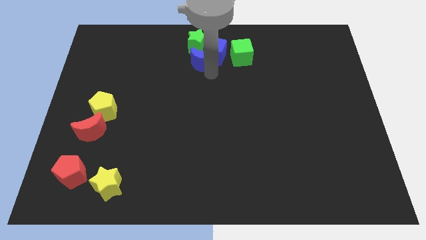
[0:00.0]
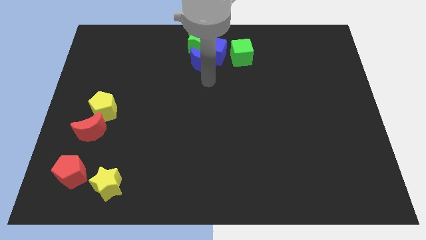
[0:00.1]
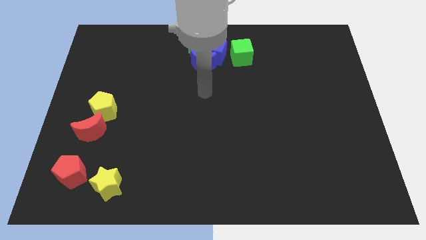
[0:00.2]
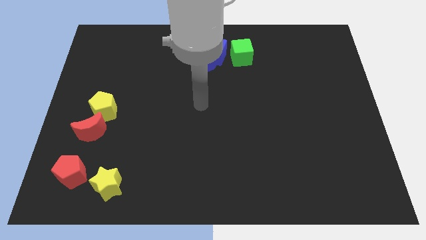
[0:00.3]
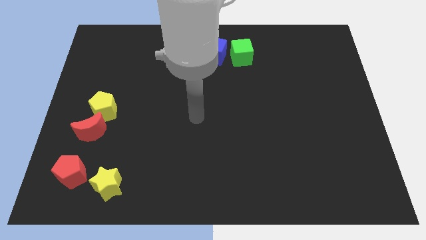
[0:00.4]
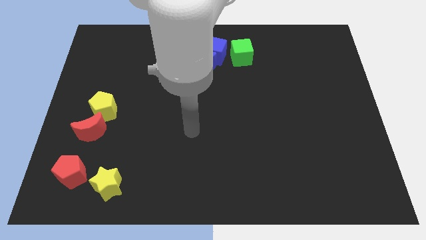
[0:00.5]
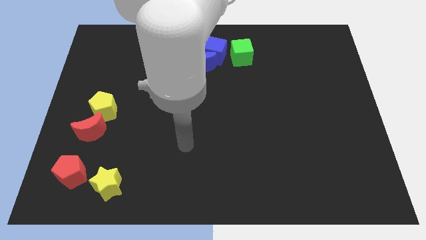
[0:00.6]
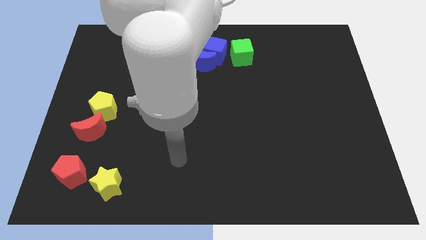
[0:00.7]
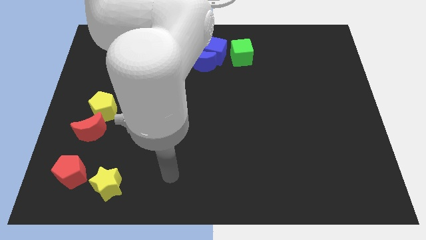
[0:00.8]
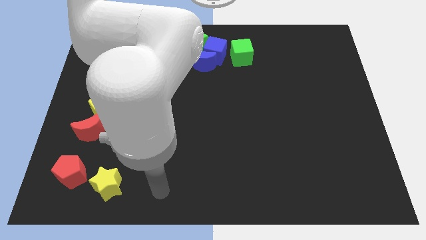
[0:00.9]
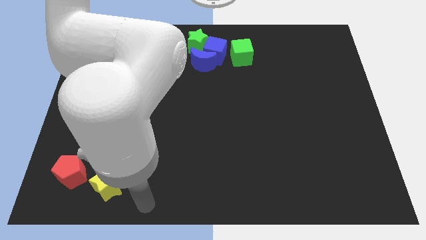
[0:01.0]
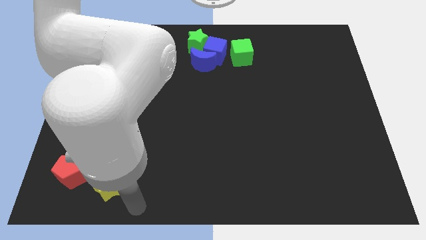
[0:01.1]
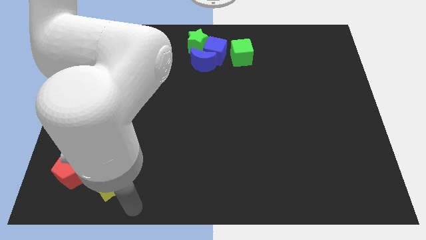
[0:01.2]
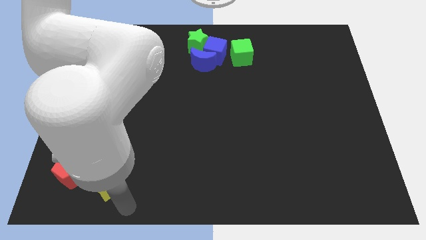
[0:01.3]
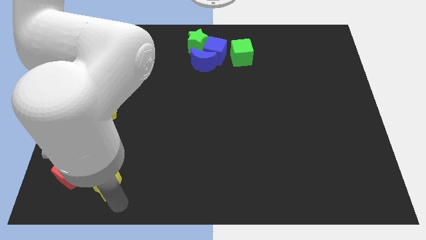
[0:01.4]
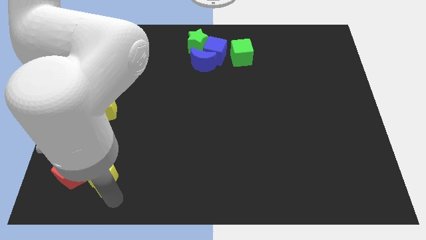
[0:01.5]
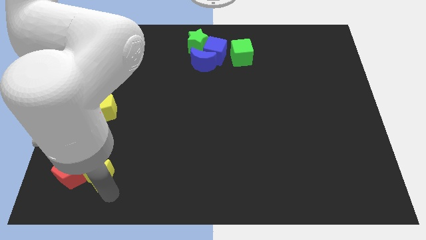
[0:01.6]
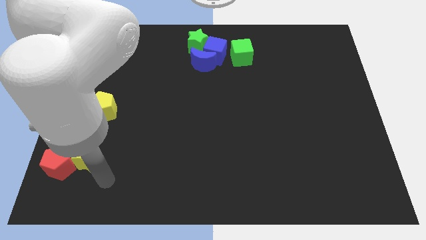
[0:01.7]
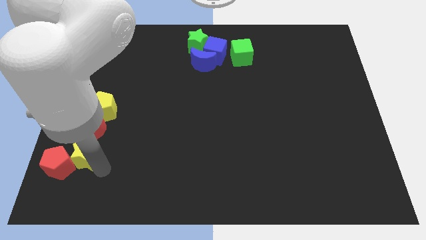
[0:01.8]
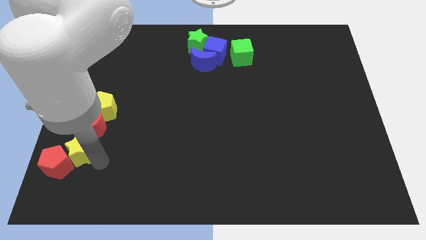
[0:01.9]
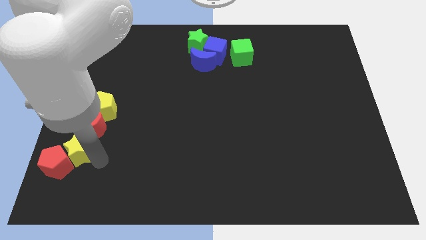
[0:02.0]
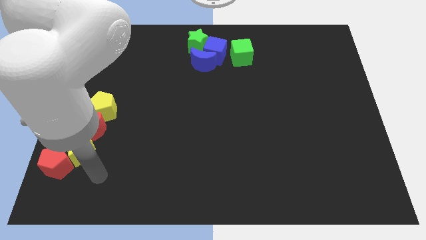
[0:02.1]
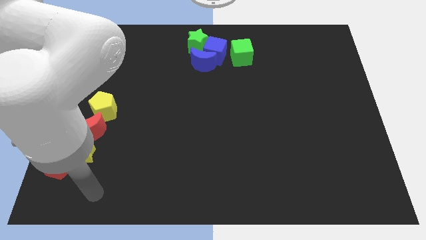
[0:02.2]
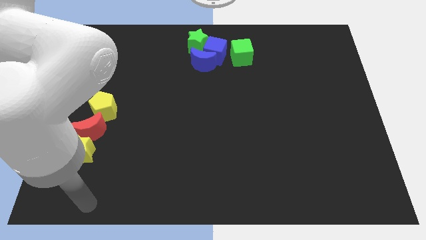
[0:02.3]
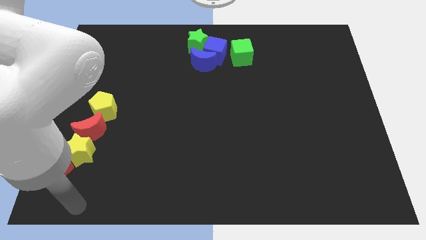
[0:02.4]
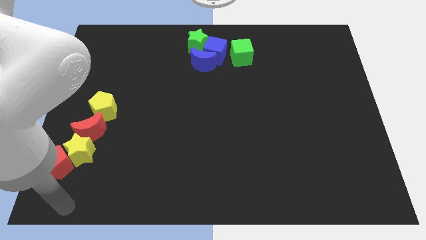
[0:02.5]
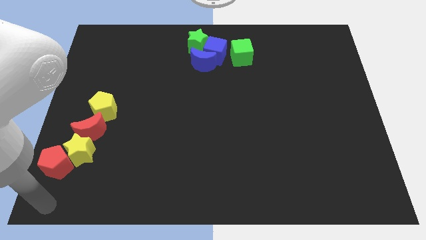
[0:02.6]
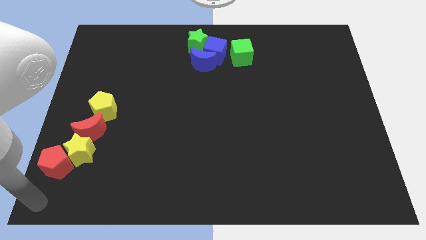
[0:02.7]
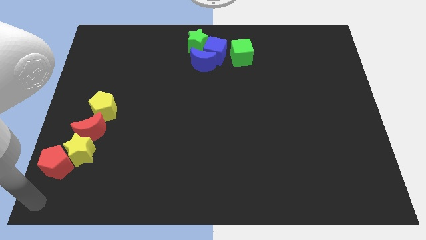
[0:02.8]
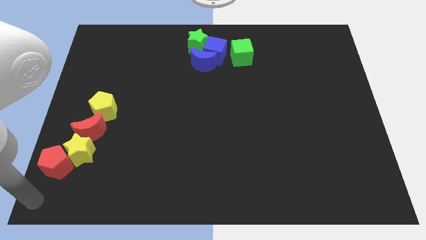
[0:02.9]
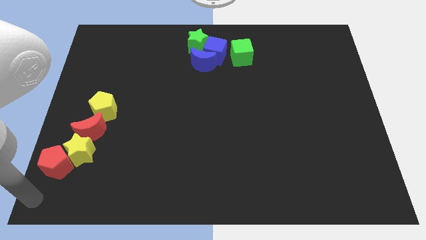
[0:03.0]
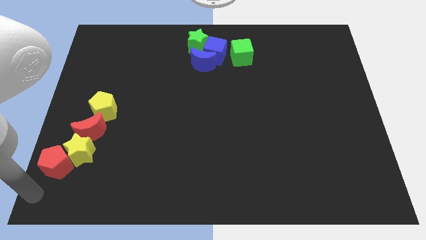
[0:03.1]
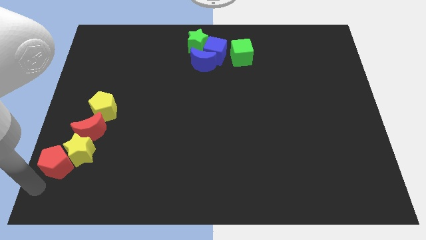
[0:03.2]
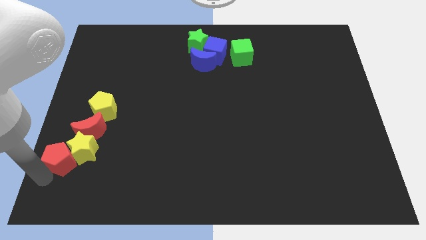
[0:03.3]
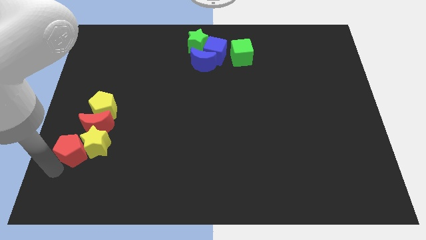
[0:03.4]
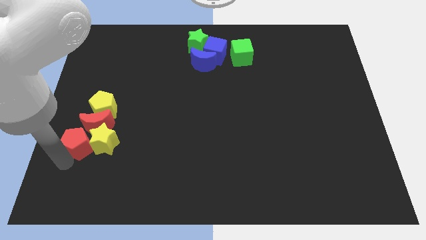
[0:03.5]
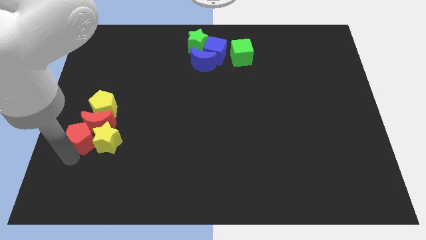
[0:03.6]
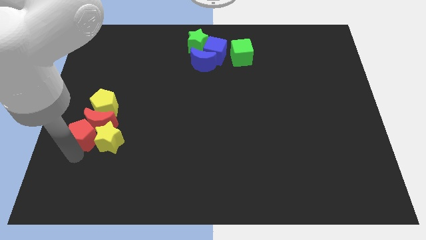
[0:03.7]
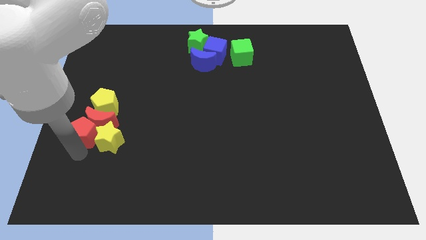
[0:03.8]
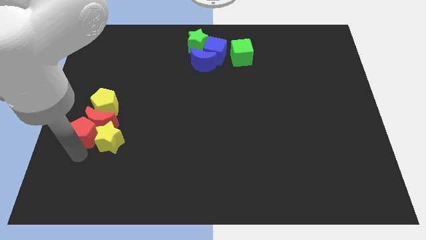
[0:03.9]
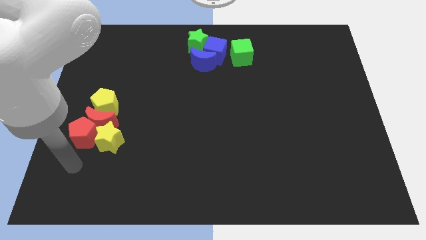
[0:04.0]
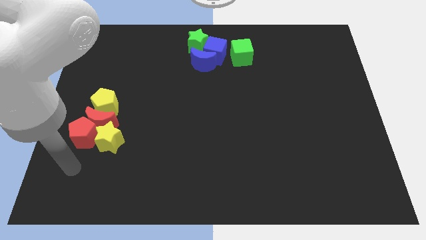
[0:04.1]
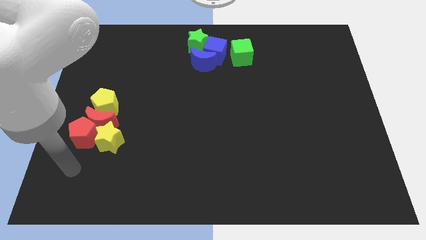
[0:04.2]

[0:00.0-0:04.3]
push the red and yellow blocks towards the top side of the board

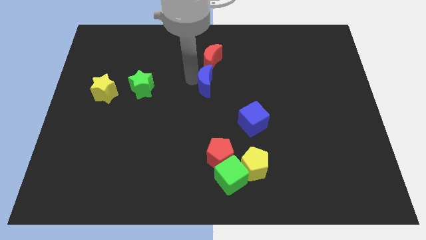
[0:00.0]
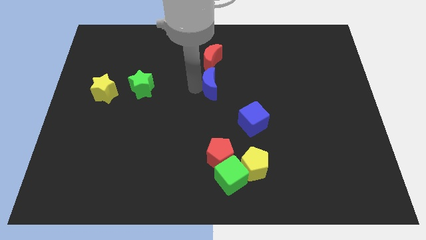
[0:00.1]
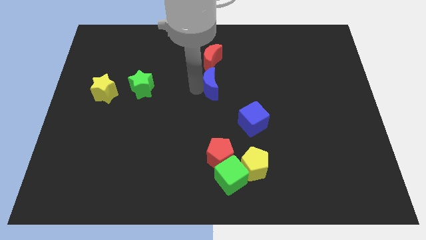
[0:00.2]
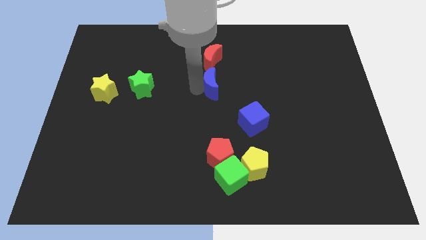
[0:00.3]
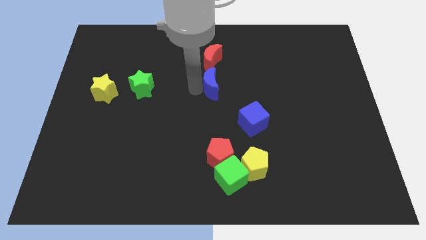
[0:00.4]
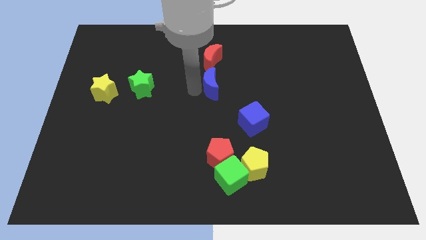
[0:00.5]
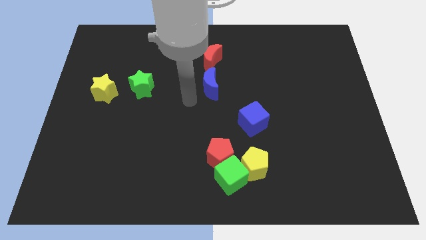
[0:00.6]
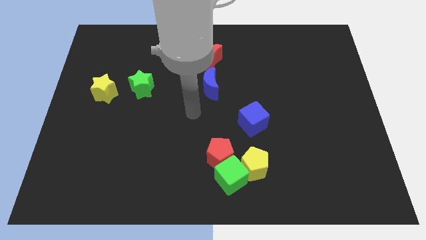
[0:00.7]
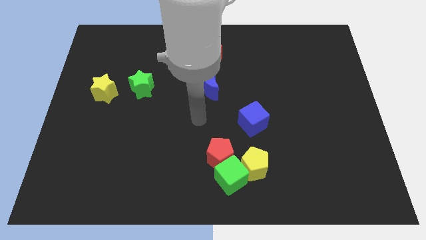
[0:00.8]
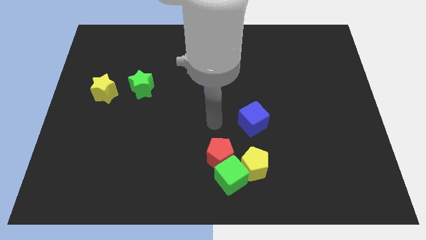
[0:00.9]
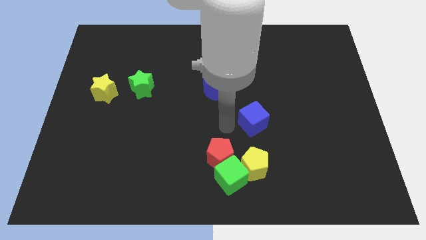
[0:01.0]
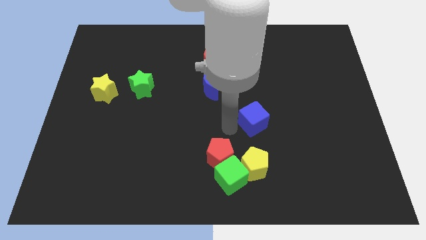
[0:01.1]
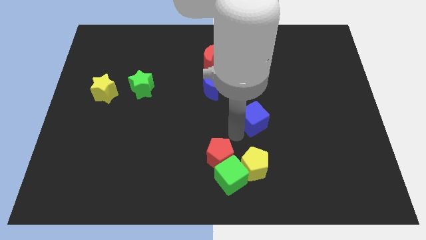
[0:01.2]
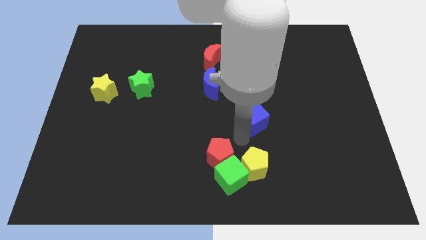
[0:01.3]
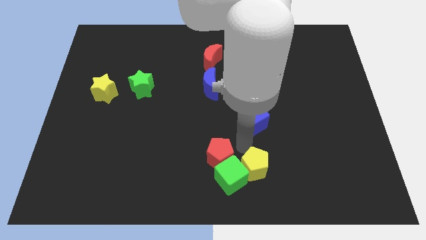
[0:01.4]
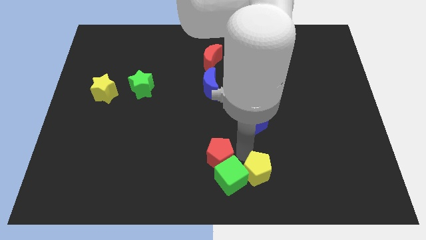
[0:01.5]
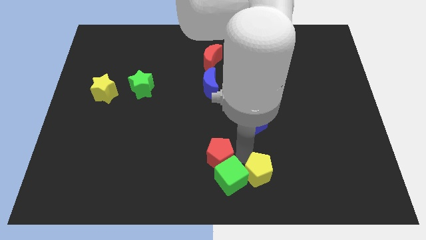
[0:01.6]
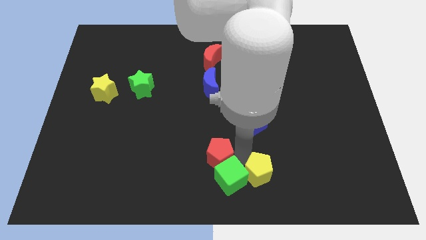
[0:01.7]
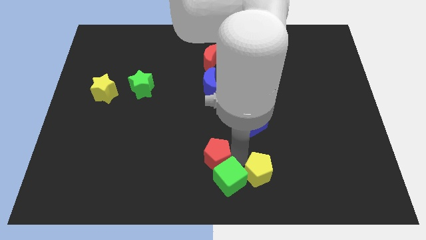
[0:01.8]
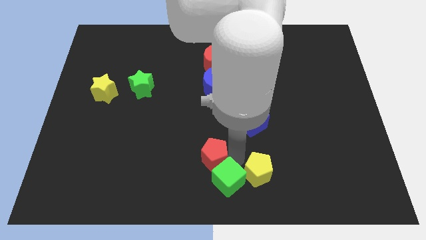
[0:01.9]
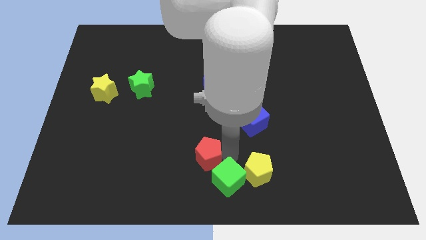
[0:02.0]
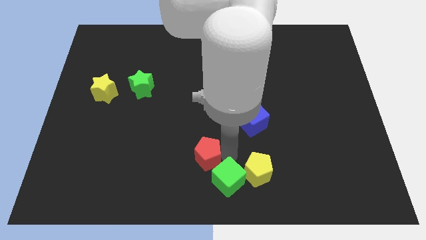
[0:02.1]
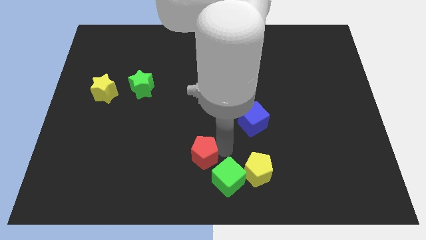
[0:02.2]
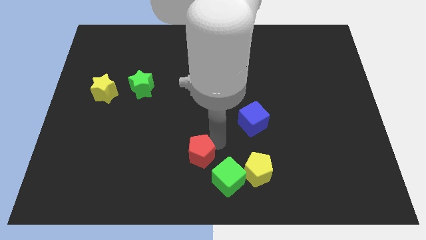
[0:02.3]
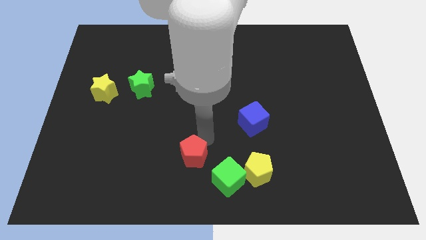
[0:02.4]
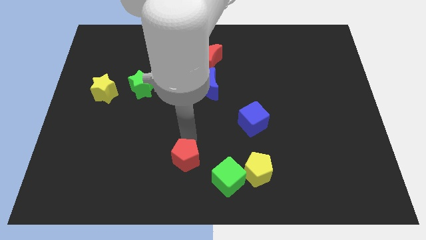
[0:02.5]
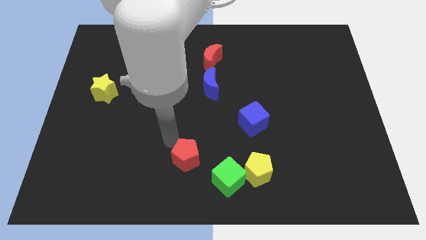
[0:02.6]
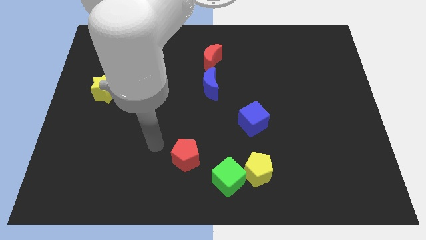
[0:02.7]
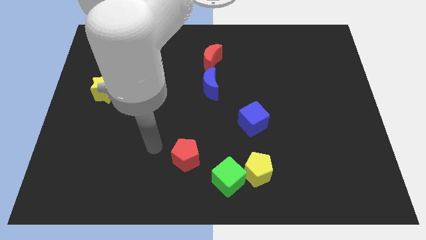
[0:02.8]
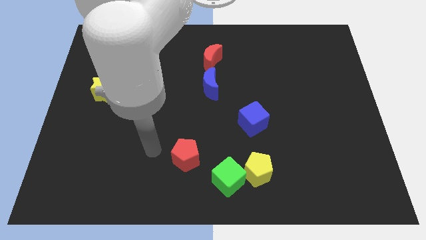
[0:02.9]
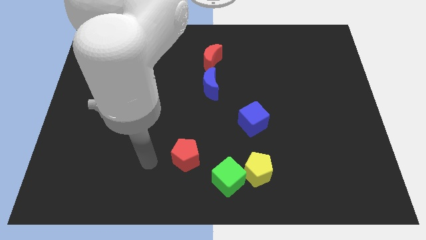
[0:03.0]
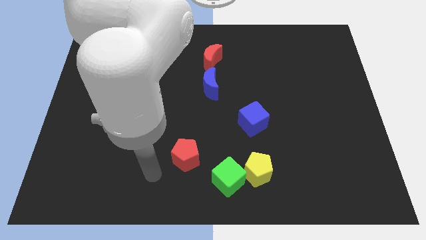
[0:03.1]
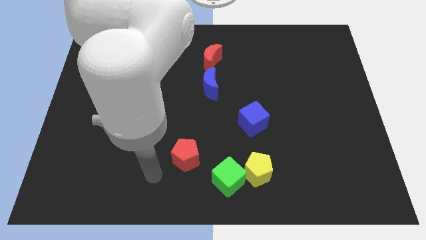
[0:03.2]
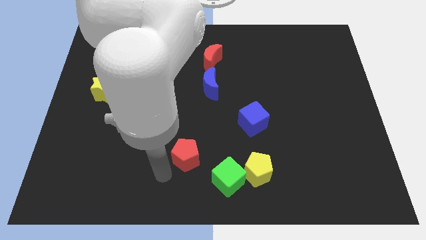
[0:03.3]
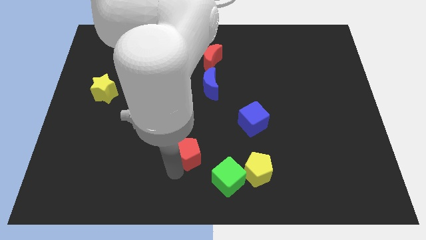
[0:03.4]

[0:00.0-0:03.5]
move your arm towards the bottom left side of the red pentagon

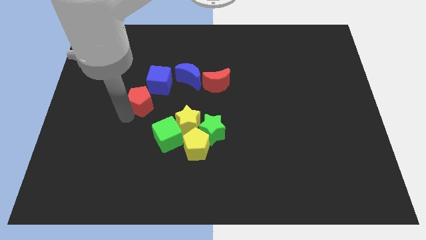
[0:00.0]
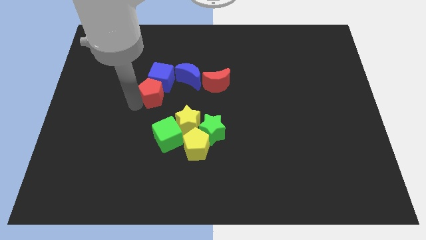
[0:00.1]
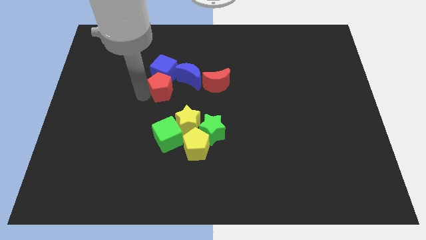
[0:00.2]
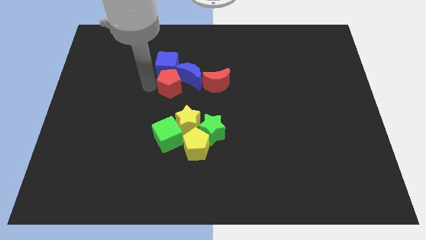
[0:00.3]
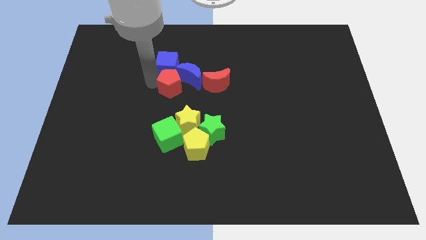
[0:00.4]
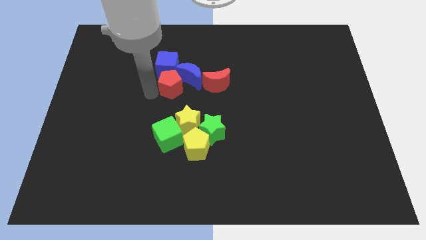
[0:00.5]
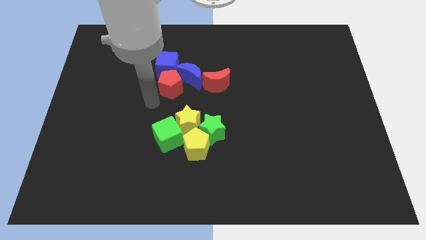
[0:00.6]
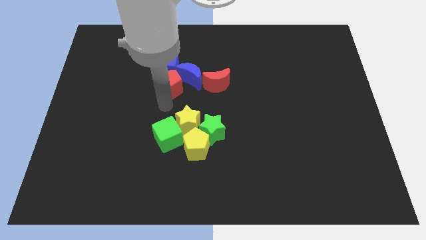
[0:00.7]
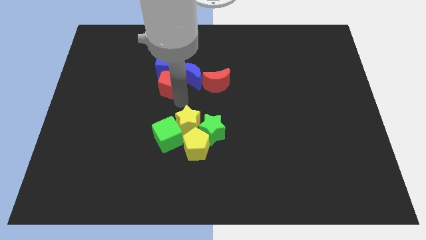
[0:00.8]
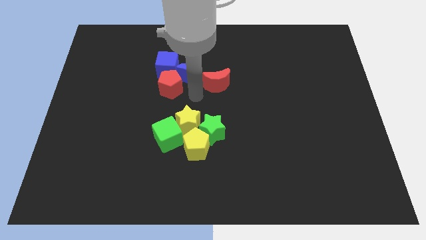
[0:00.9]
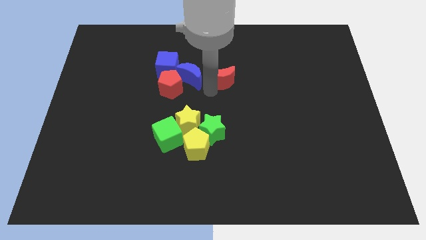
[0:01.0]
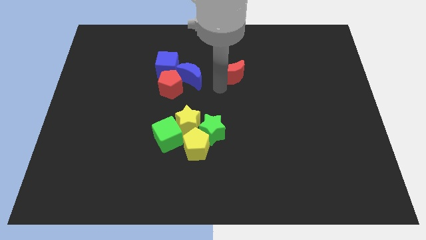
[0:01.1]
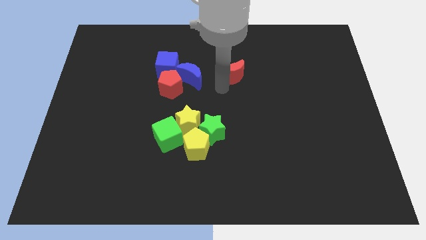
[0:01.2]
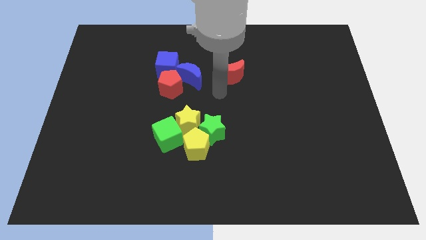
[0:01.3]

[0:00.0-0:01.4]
place red pentagon below blue blocks
